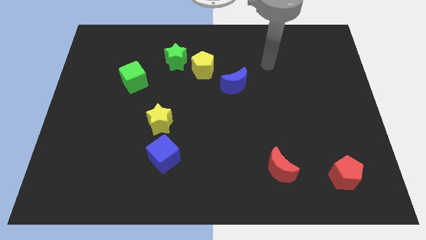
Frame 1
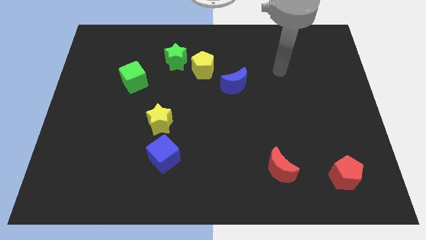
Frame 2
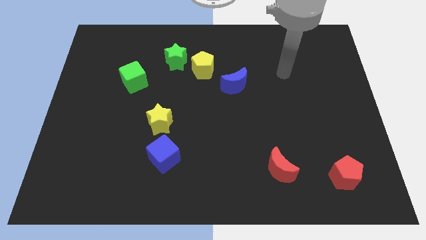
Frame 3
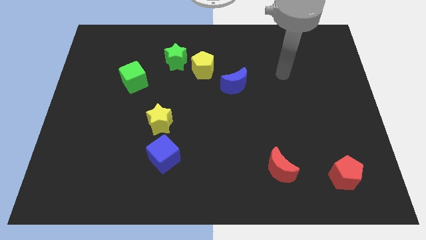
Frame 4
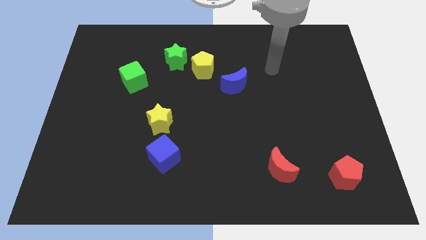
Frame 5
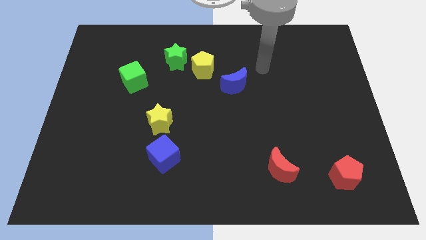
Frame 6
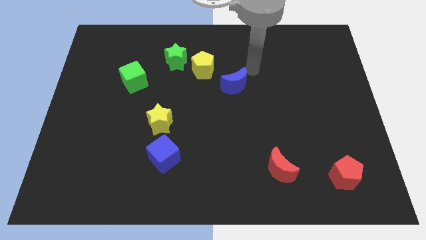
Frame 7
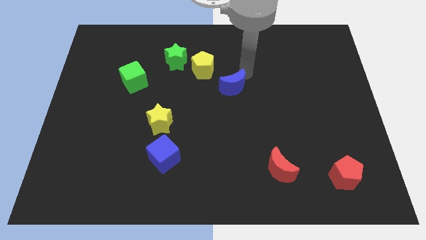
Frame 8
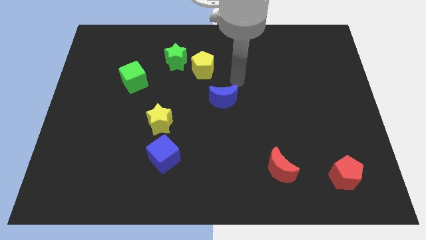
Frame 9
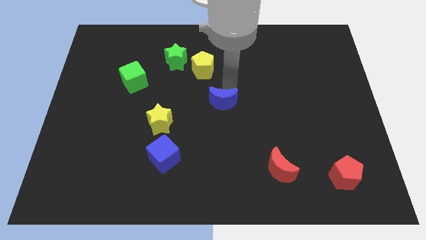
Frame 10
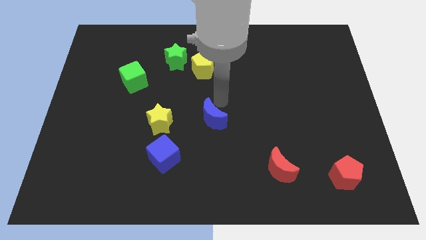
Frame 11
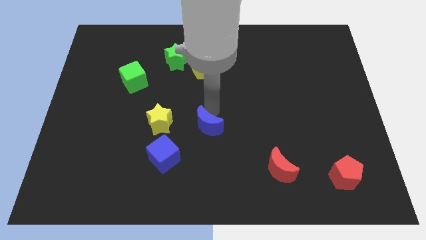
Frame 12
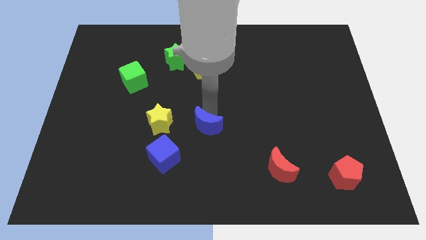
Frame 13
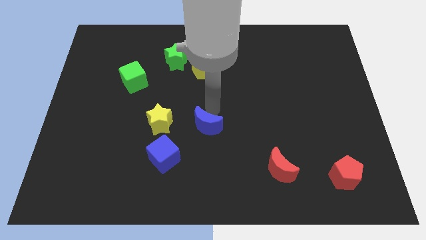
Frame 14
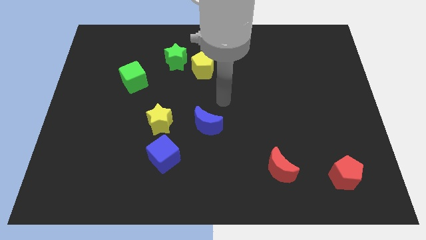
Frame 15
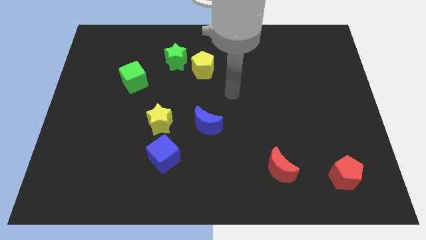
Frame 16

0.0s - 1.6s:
place the blue crescent below the yellow pentagon

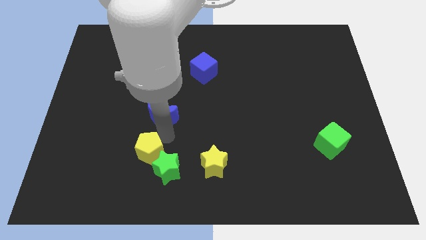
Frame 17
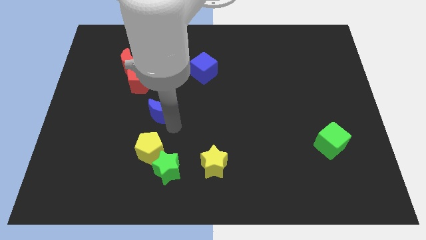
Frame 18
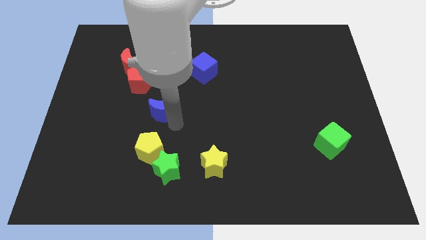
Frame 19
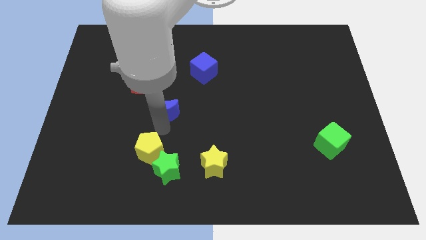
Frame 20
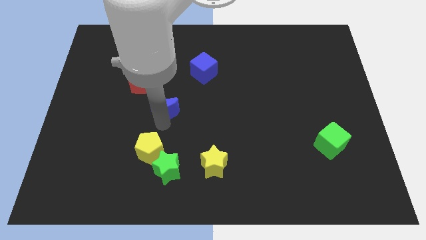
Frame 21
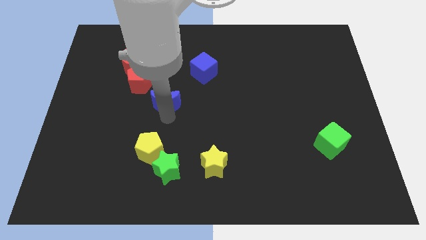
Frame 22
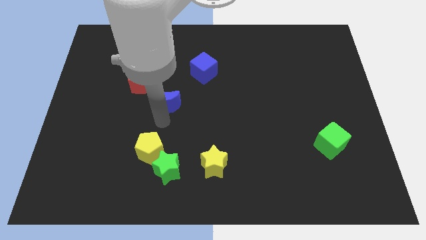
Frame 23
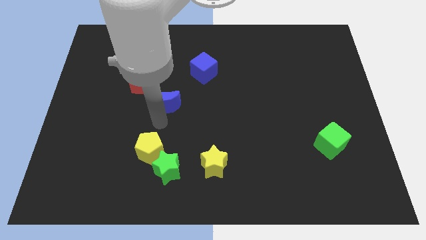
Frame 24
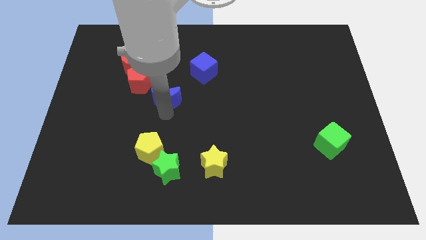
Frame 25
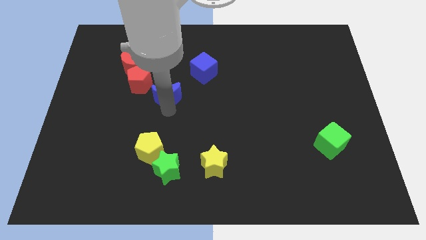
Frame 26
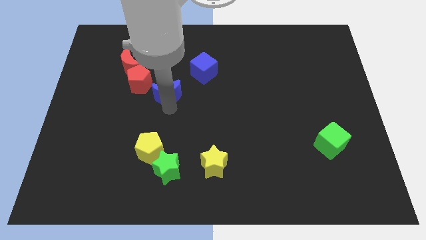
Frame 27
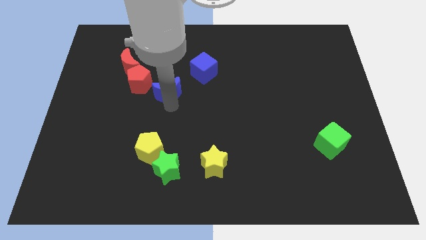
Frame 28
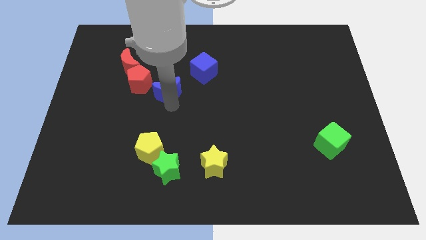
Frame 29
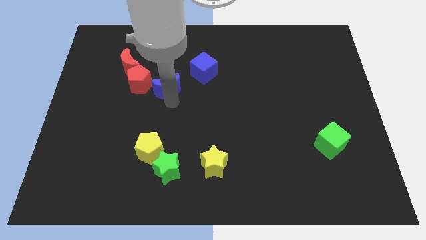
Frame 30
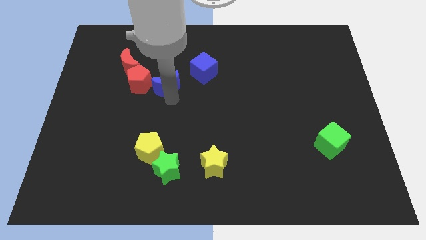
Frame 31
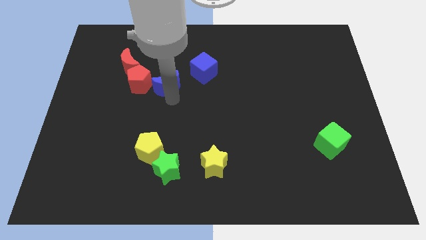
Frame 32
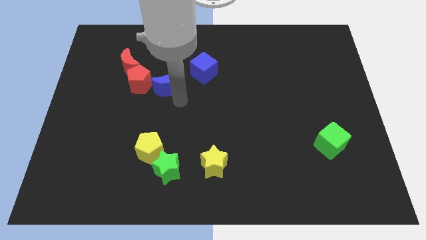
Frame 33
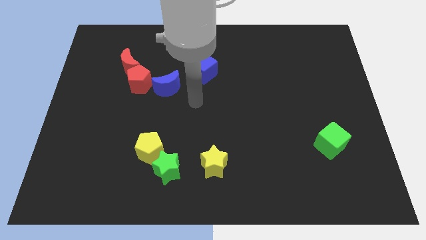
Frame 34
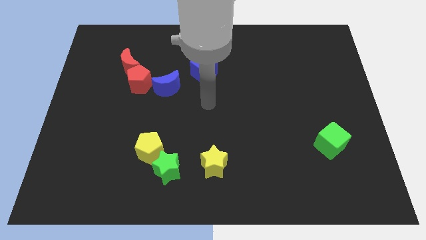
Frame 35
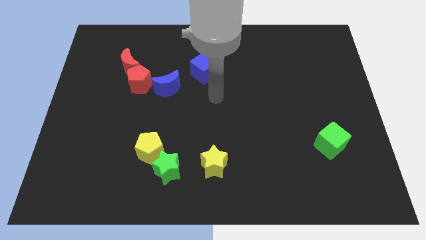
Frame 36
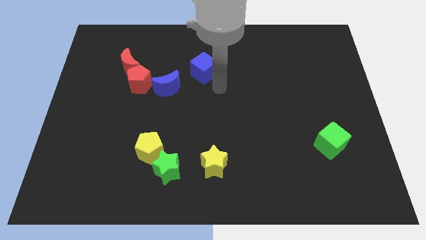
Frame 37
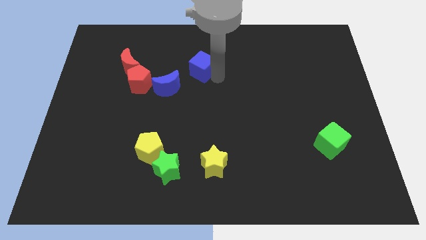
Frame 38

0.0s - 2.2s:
place the blue moon to the right of red pentagon

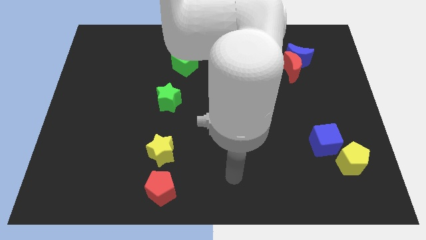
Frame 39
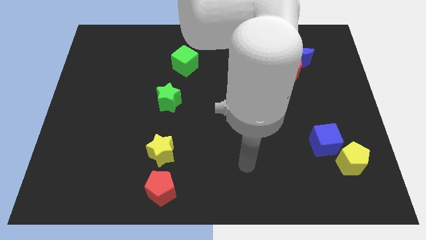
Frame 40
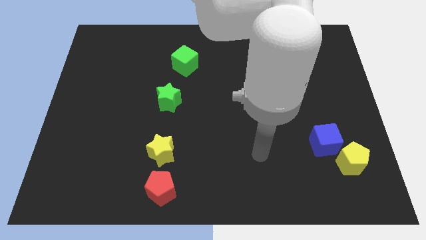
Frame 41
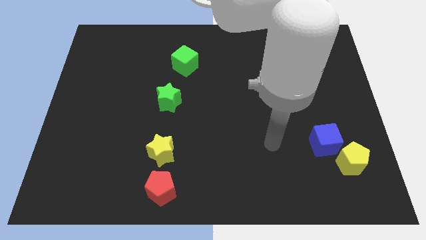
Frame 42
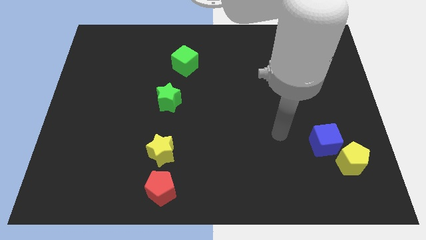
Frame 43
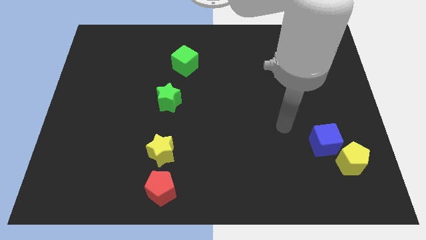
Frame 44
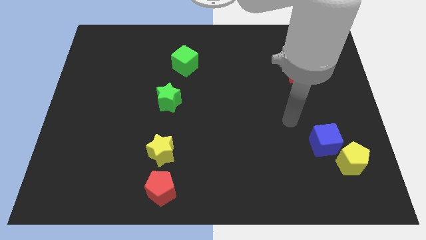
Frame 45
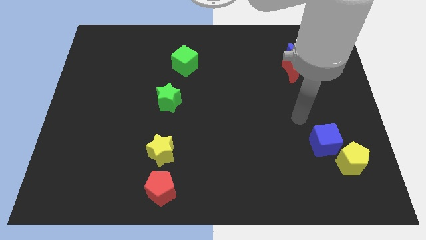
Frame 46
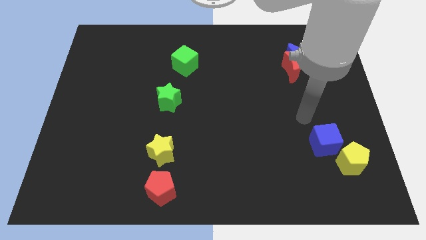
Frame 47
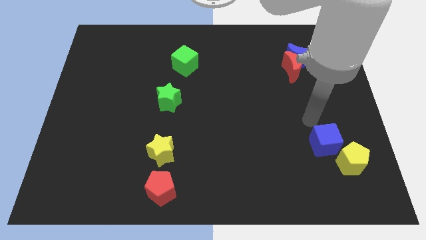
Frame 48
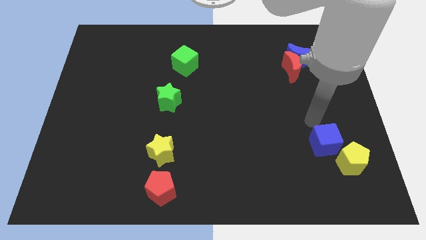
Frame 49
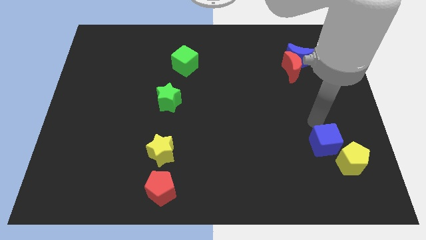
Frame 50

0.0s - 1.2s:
place your arm to the top of blue moon

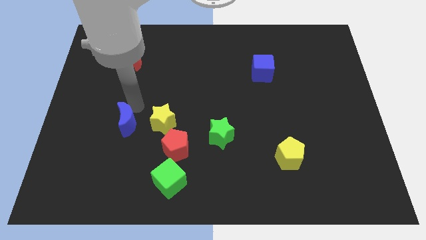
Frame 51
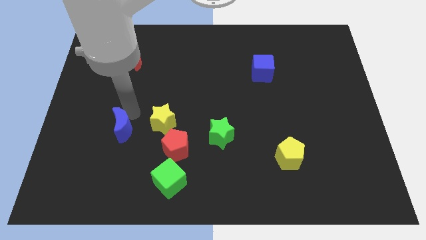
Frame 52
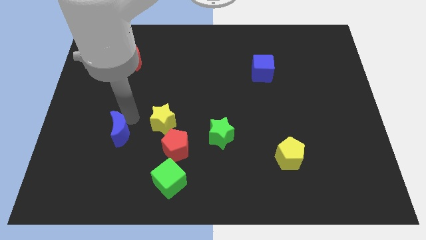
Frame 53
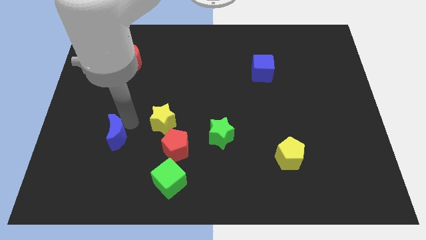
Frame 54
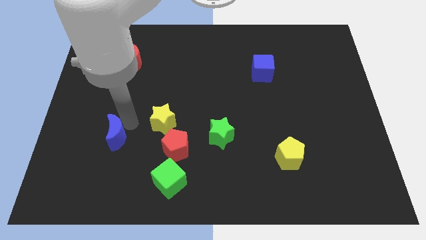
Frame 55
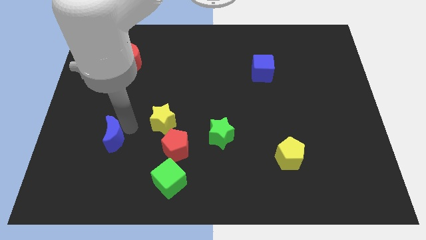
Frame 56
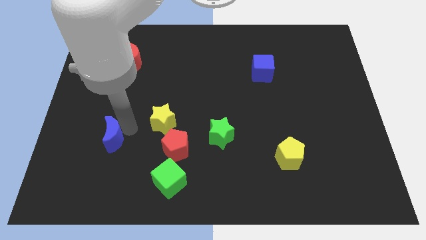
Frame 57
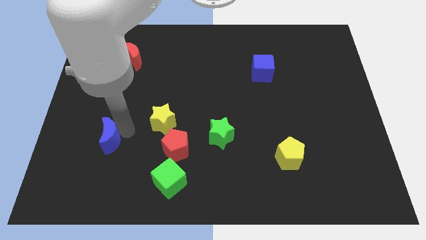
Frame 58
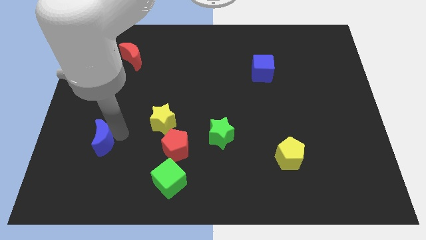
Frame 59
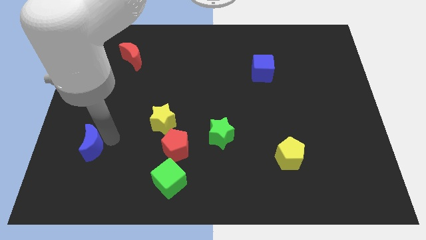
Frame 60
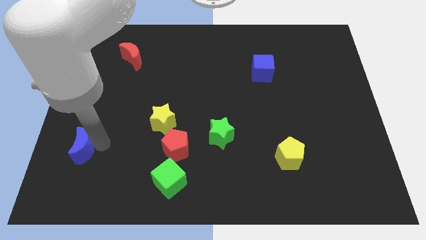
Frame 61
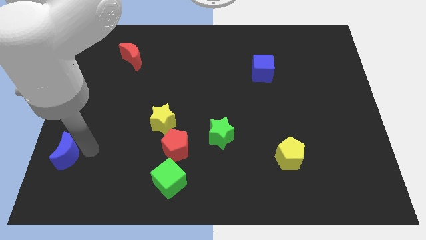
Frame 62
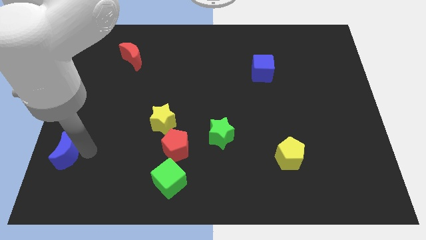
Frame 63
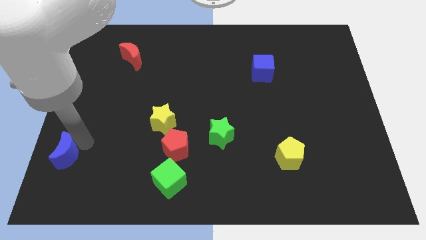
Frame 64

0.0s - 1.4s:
drag the blue moon towards the bottom left

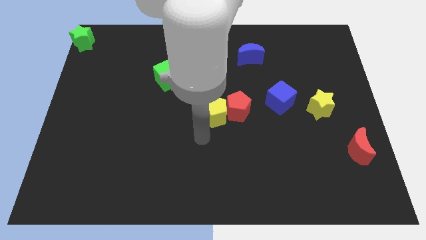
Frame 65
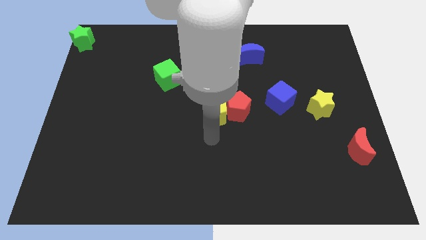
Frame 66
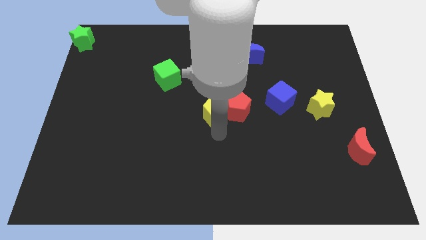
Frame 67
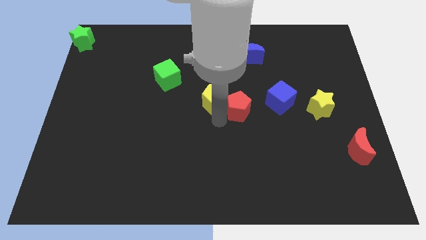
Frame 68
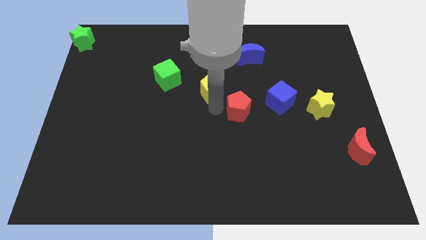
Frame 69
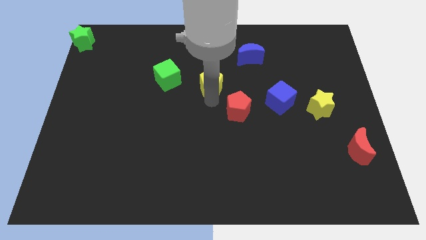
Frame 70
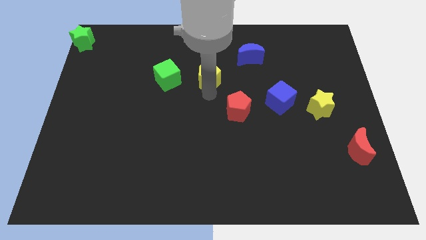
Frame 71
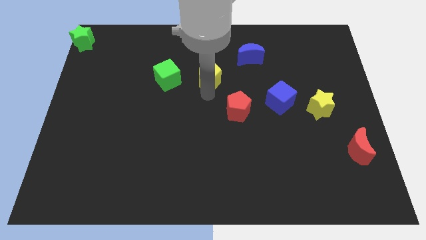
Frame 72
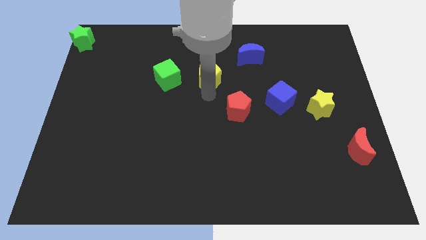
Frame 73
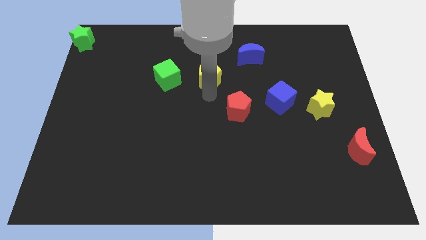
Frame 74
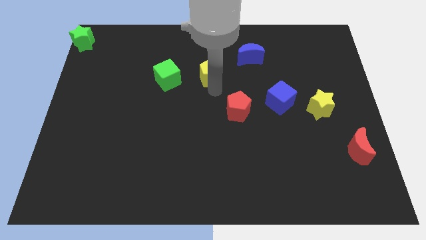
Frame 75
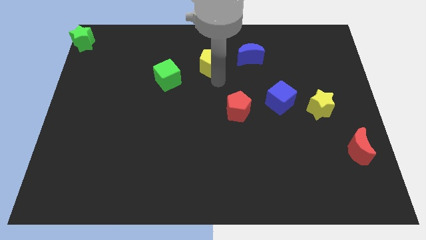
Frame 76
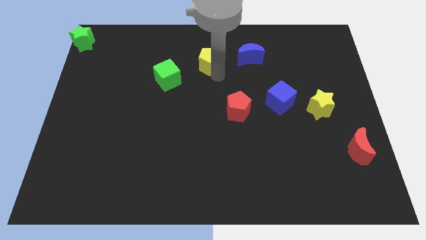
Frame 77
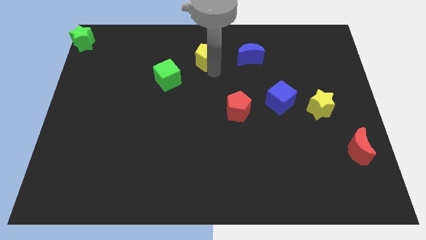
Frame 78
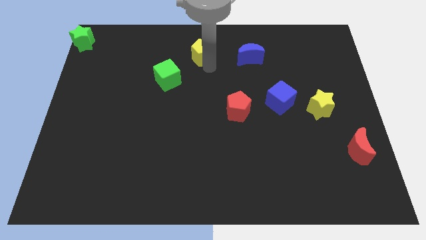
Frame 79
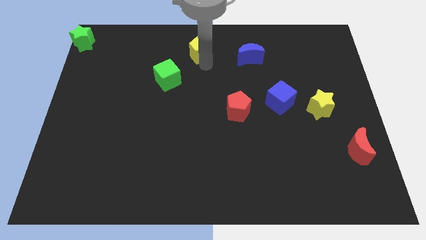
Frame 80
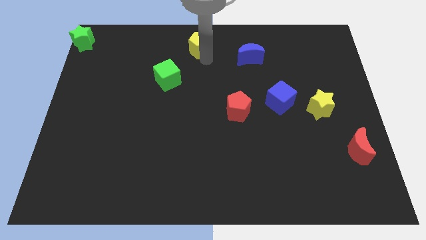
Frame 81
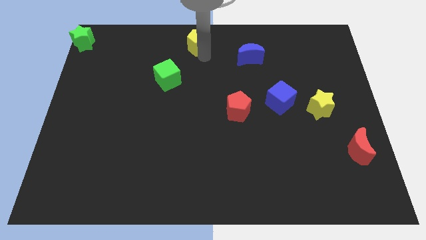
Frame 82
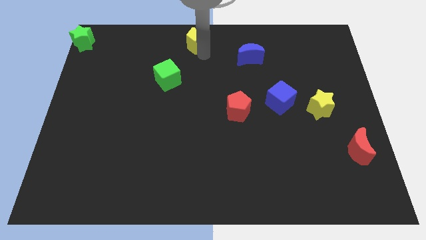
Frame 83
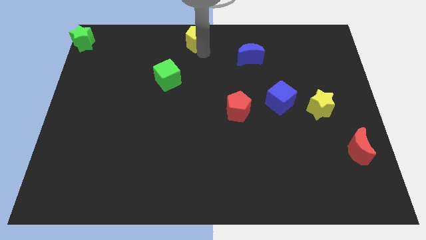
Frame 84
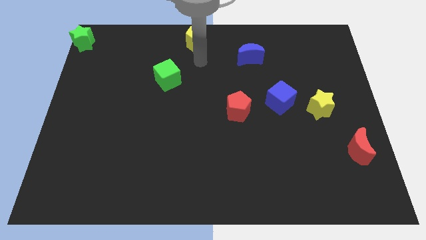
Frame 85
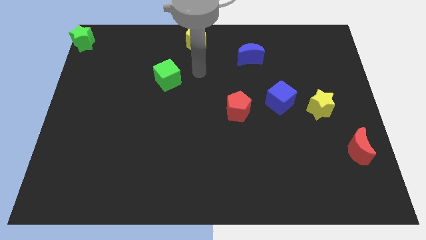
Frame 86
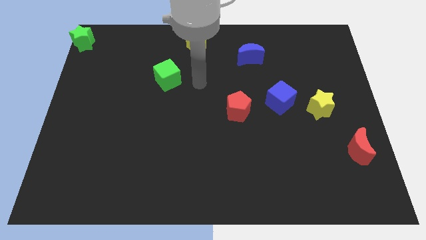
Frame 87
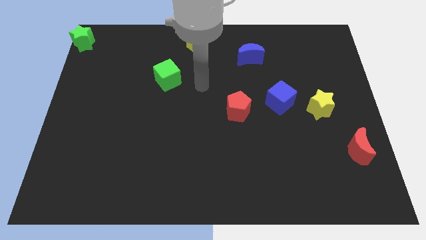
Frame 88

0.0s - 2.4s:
slide the yellow pentagon parallel to the right of green star
